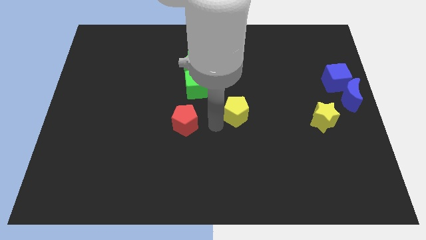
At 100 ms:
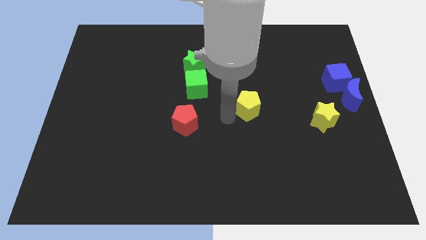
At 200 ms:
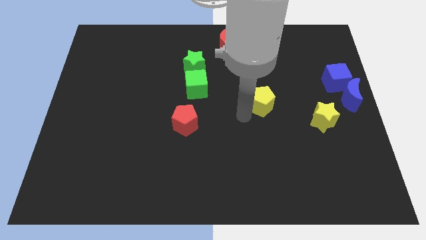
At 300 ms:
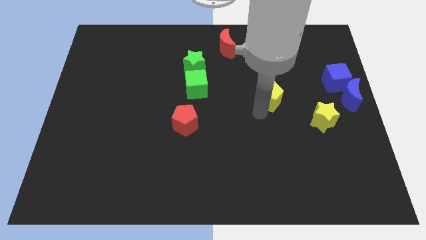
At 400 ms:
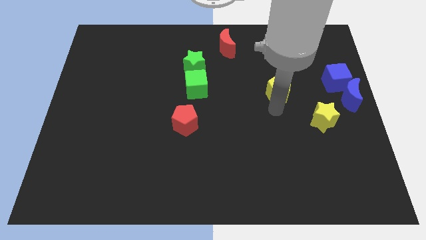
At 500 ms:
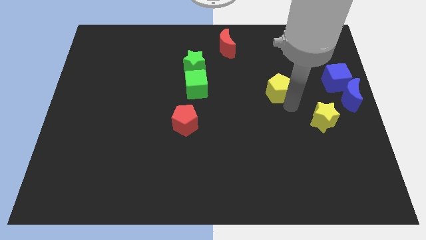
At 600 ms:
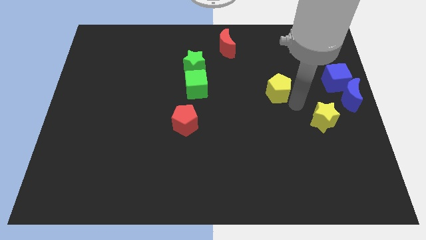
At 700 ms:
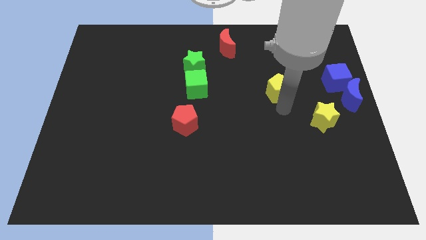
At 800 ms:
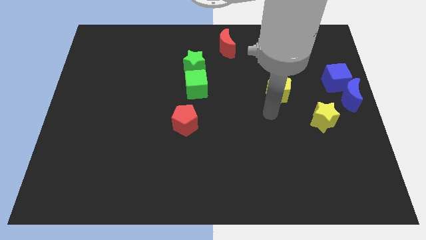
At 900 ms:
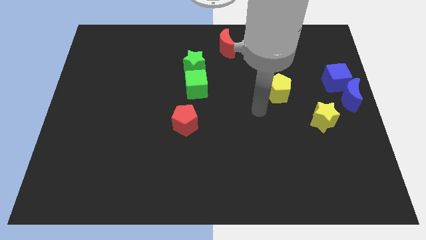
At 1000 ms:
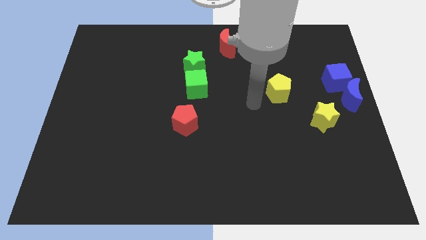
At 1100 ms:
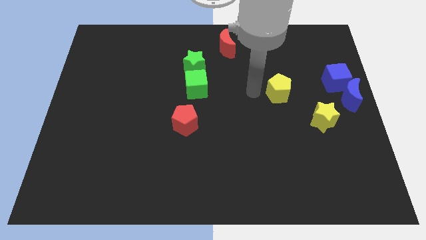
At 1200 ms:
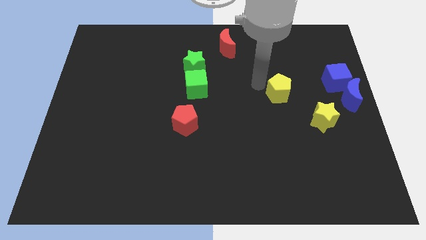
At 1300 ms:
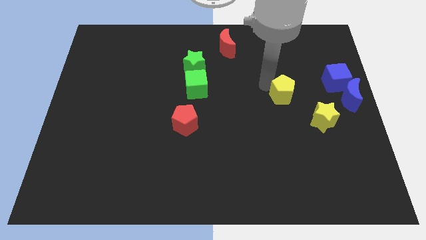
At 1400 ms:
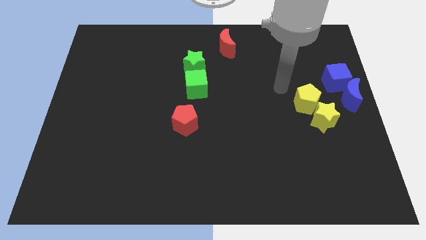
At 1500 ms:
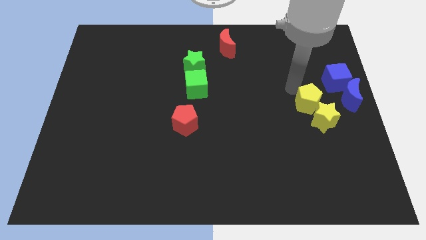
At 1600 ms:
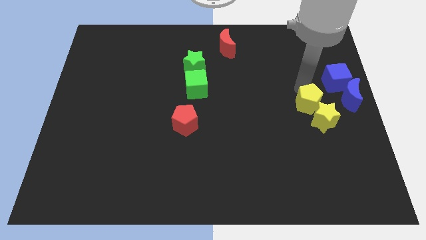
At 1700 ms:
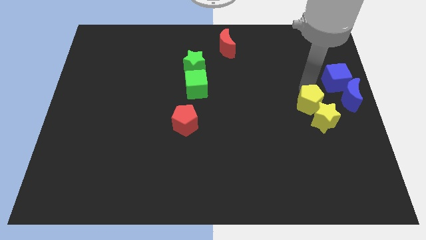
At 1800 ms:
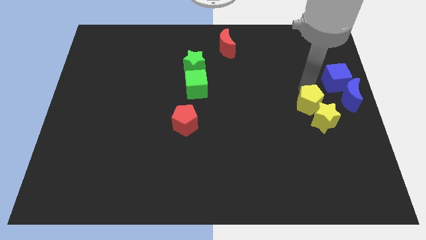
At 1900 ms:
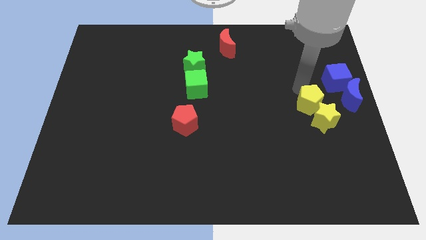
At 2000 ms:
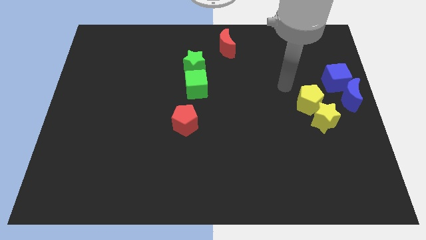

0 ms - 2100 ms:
add yellow pentagon into yellow star

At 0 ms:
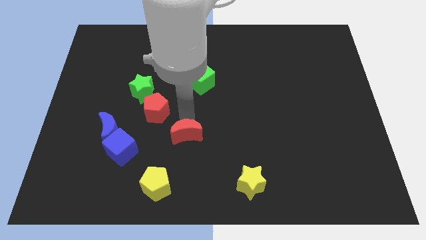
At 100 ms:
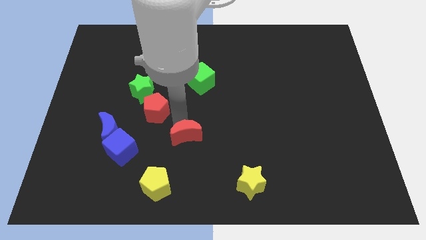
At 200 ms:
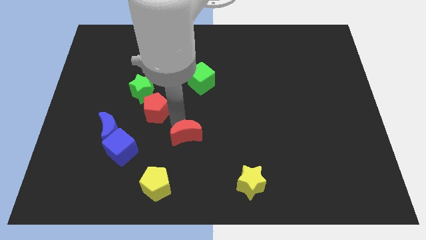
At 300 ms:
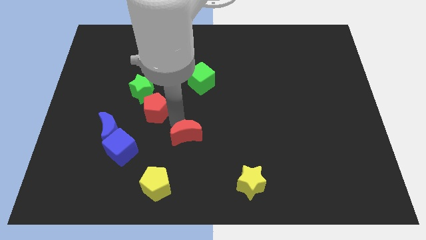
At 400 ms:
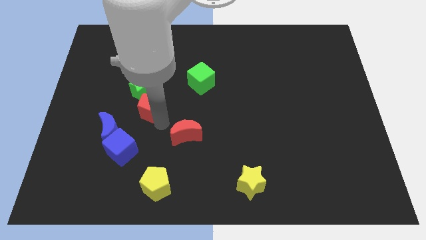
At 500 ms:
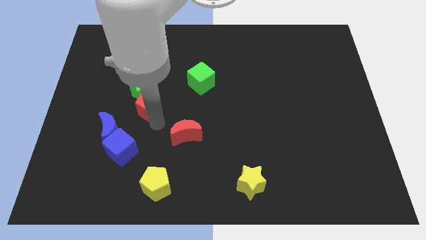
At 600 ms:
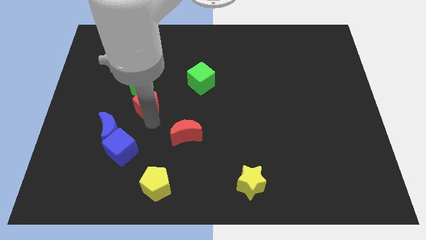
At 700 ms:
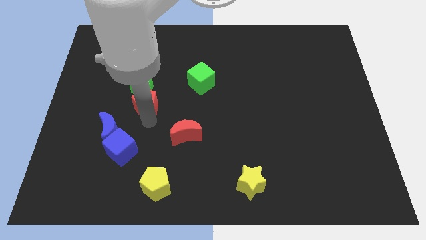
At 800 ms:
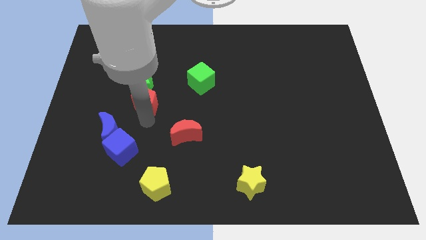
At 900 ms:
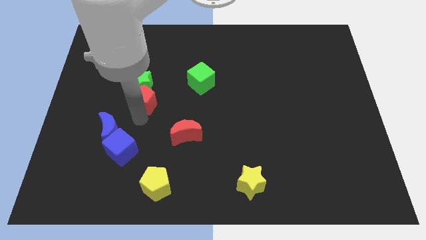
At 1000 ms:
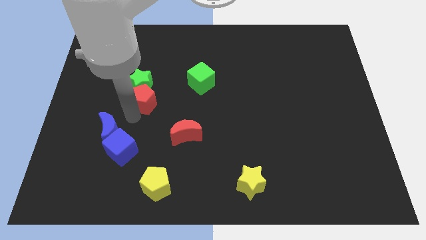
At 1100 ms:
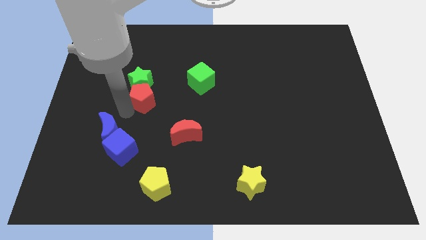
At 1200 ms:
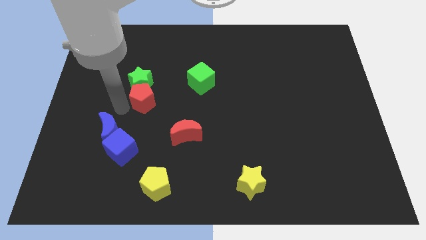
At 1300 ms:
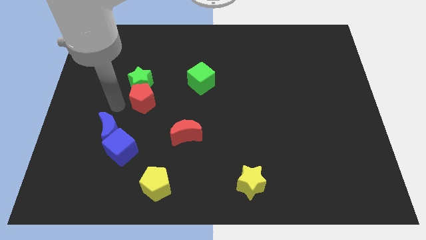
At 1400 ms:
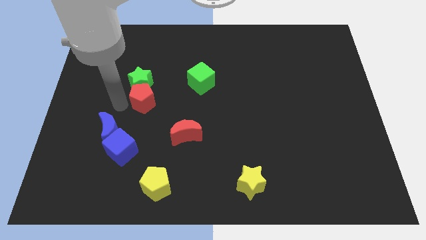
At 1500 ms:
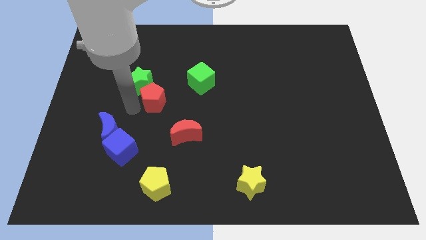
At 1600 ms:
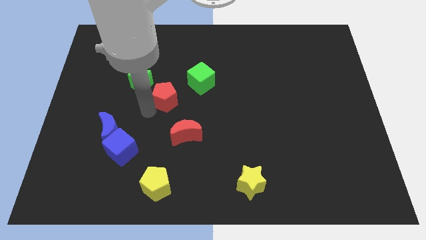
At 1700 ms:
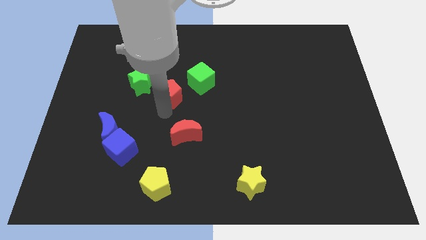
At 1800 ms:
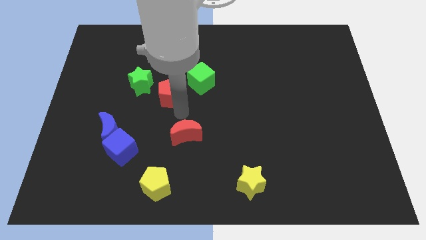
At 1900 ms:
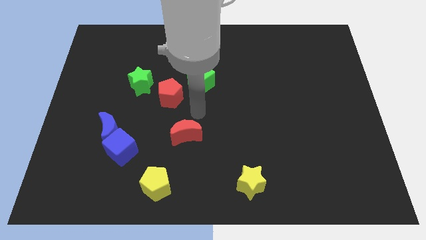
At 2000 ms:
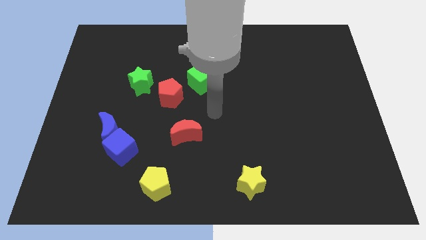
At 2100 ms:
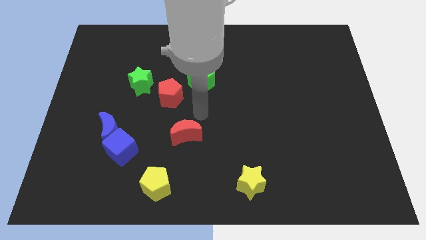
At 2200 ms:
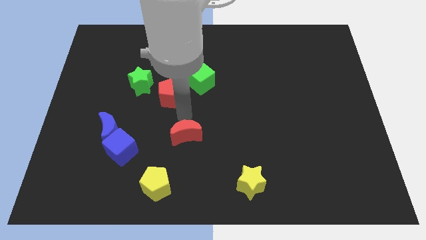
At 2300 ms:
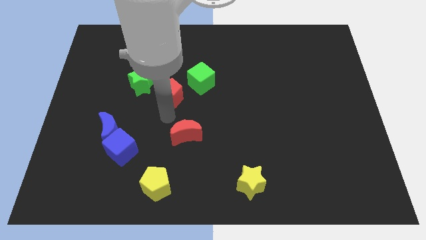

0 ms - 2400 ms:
place the arm between red blocks

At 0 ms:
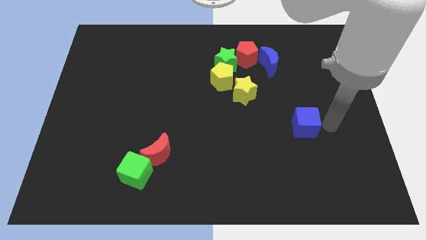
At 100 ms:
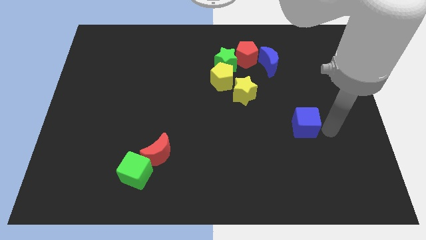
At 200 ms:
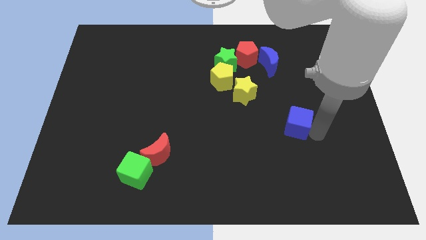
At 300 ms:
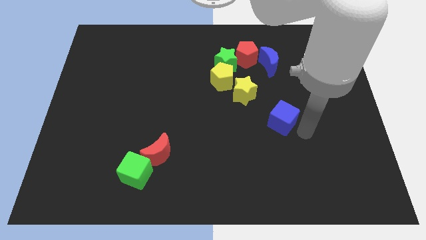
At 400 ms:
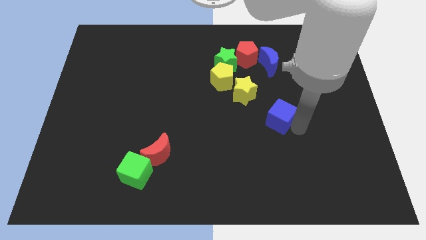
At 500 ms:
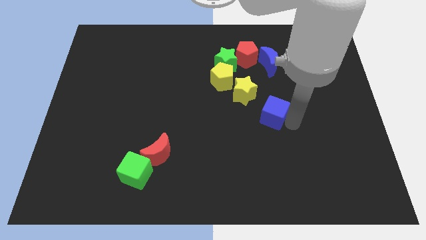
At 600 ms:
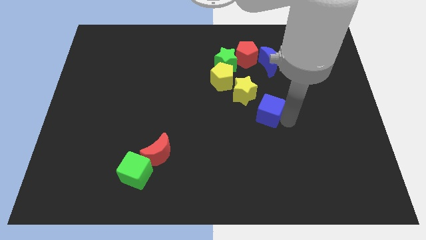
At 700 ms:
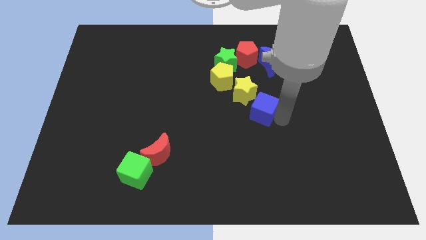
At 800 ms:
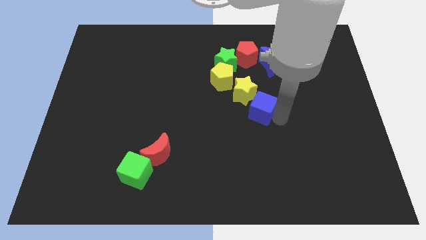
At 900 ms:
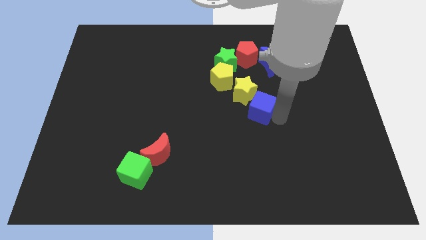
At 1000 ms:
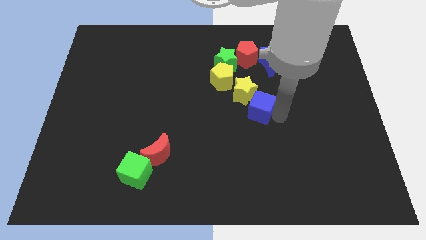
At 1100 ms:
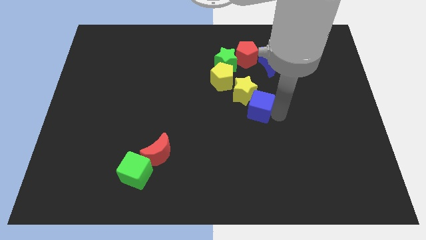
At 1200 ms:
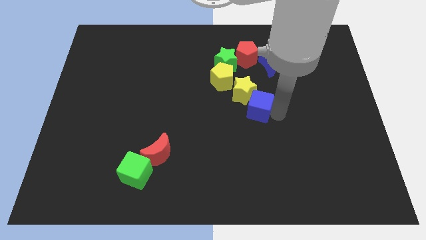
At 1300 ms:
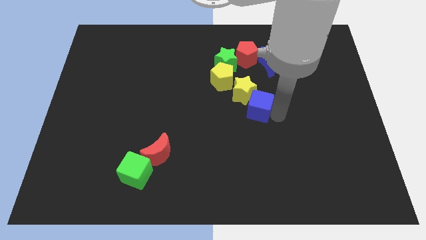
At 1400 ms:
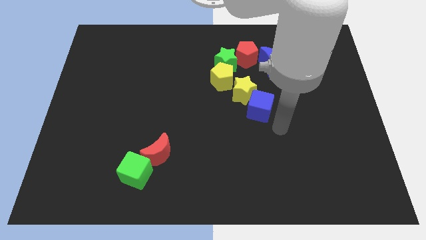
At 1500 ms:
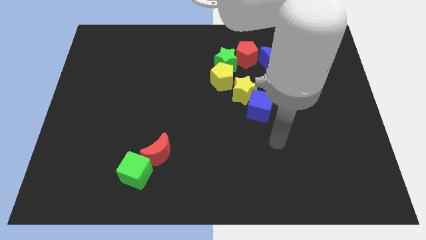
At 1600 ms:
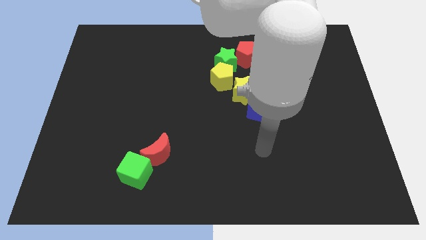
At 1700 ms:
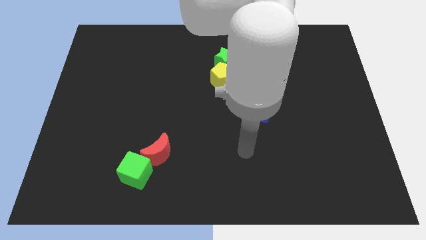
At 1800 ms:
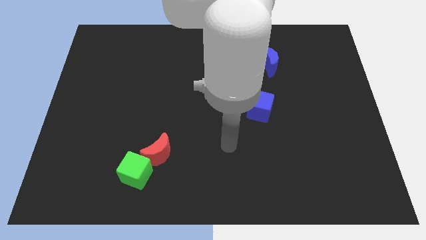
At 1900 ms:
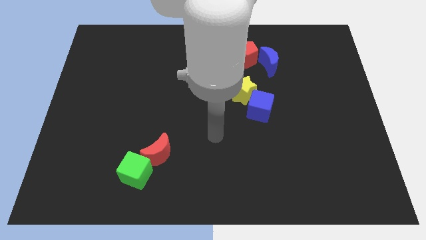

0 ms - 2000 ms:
push the cube into the yellow star

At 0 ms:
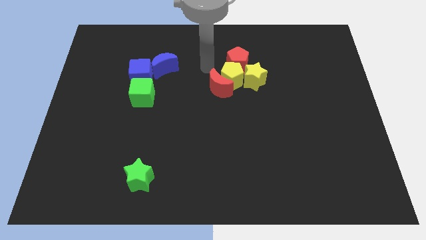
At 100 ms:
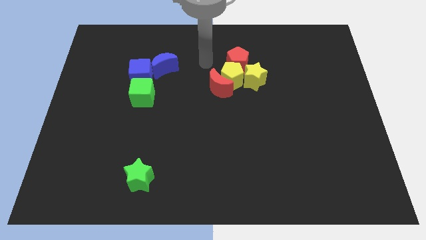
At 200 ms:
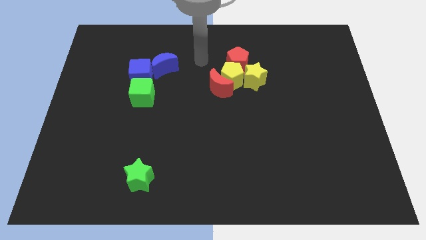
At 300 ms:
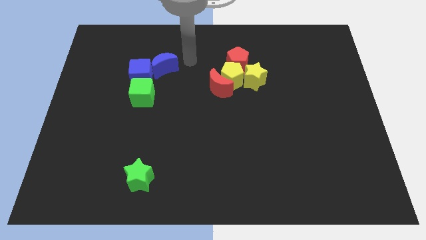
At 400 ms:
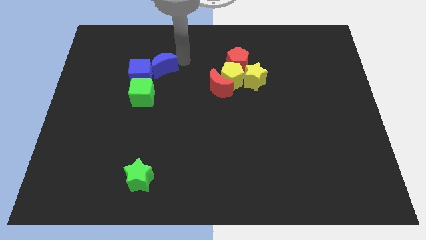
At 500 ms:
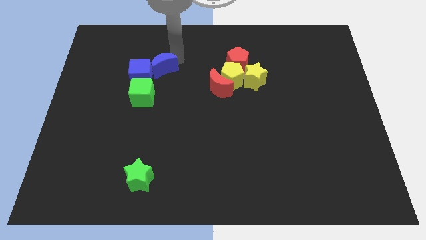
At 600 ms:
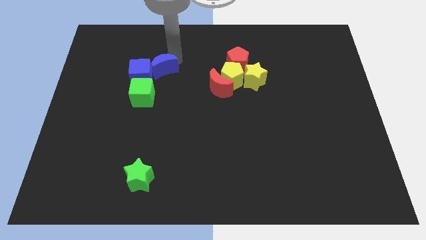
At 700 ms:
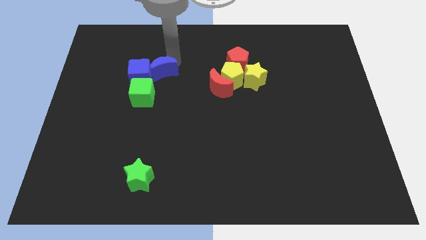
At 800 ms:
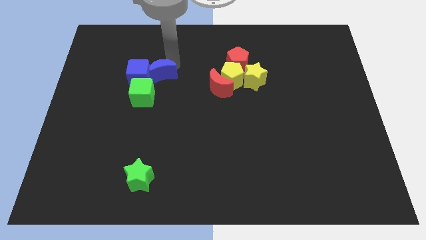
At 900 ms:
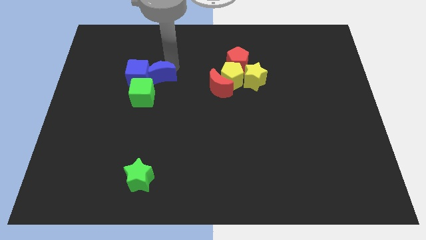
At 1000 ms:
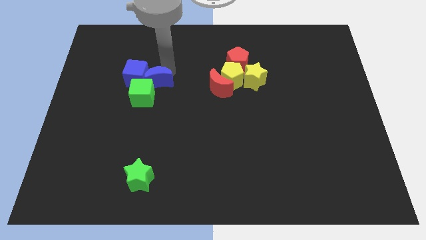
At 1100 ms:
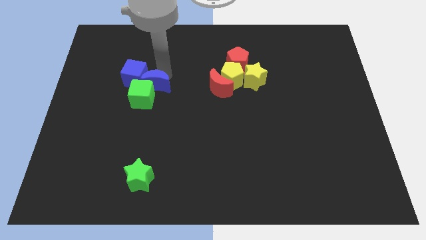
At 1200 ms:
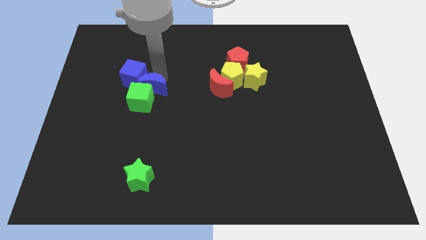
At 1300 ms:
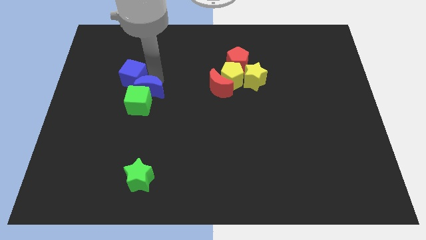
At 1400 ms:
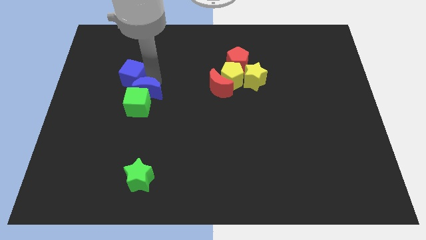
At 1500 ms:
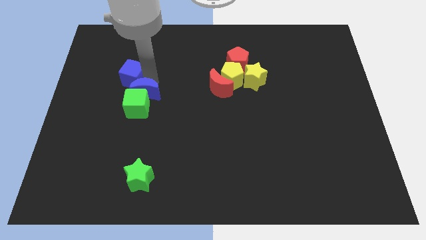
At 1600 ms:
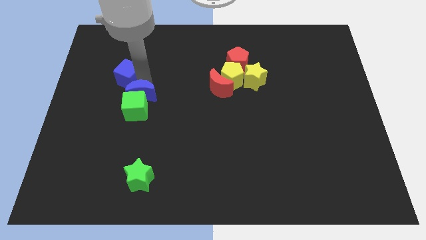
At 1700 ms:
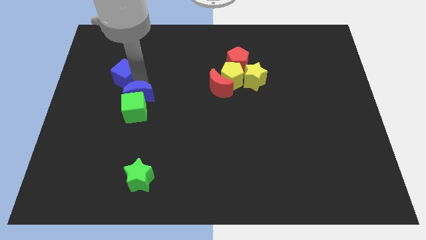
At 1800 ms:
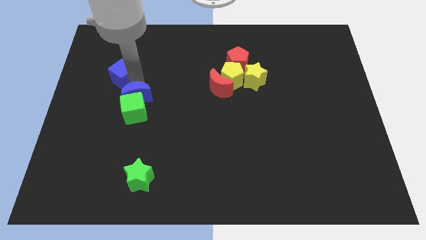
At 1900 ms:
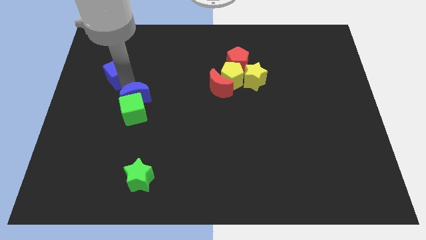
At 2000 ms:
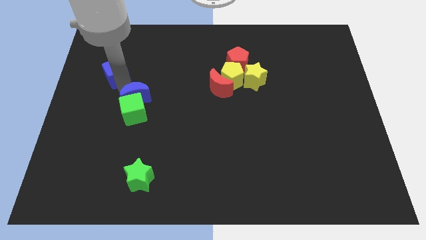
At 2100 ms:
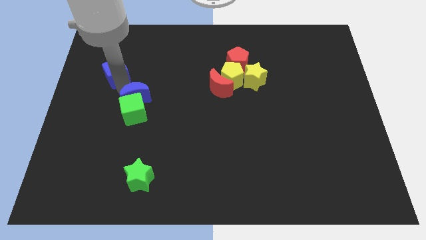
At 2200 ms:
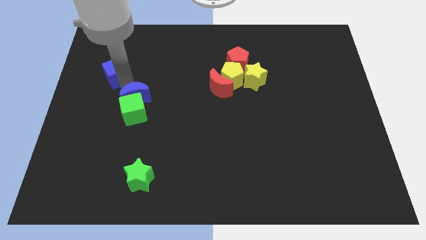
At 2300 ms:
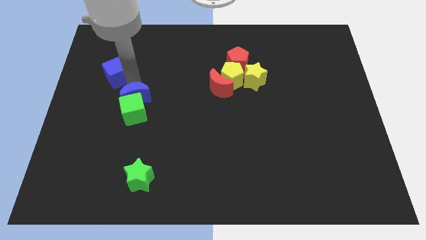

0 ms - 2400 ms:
move the blue moon above the green cube

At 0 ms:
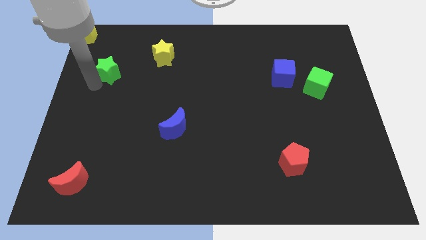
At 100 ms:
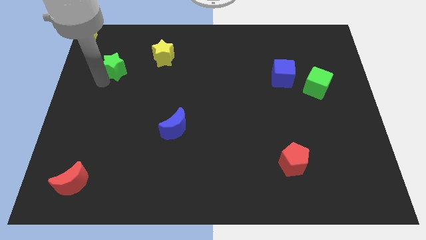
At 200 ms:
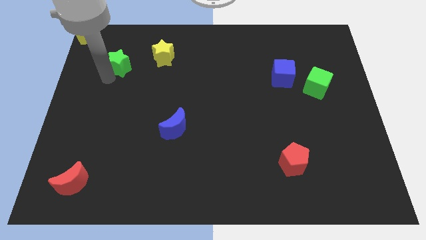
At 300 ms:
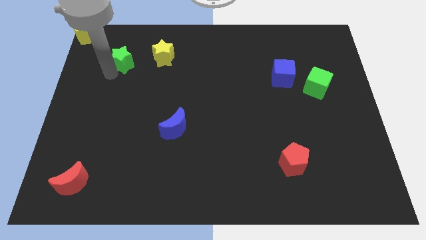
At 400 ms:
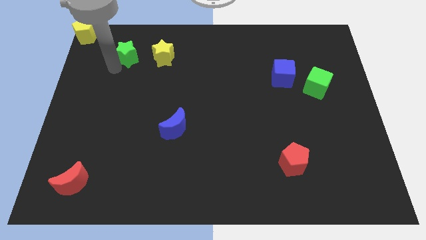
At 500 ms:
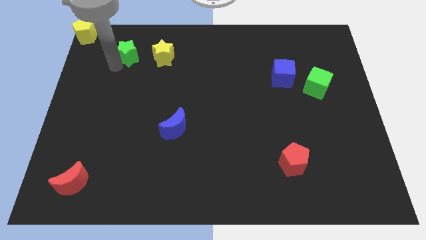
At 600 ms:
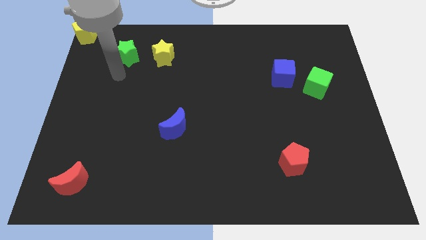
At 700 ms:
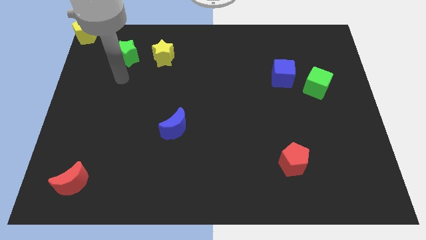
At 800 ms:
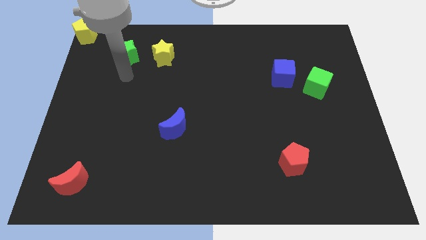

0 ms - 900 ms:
place the green star to the left of the yellow star
